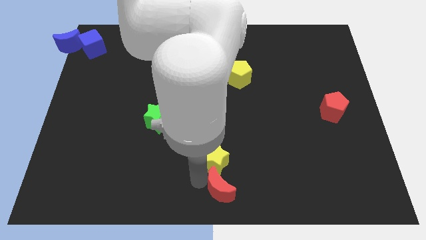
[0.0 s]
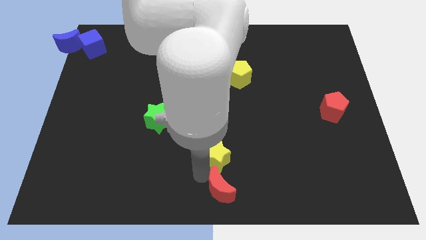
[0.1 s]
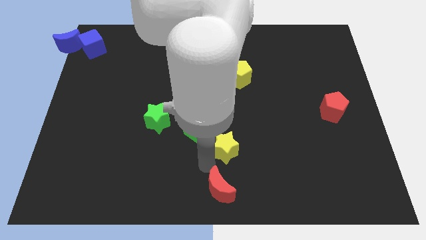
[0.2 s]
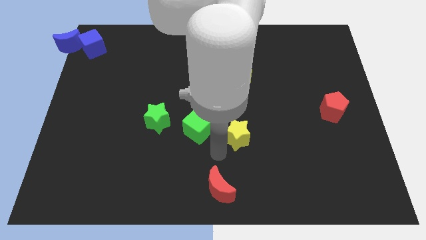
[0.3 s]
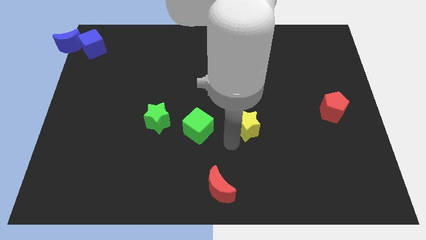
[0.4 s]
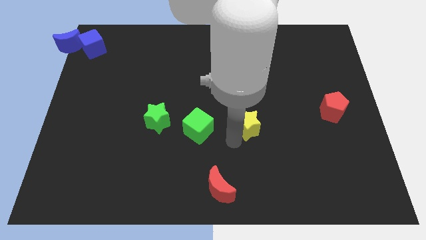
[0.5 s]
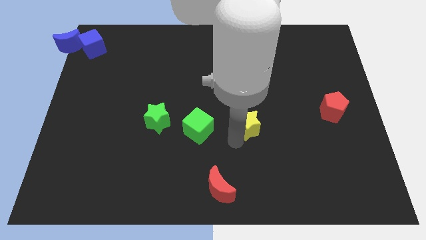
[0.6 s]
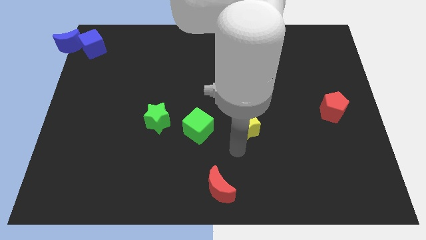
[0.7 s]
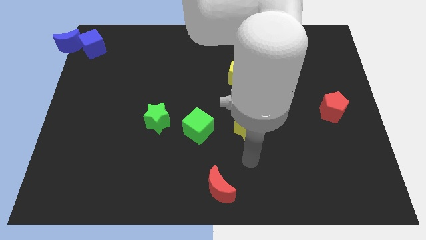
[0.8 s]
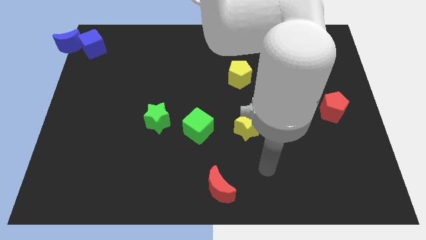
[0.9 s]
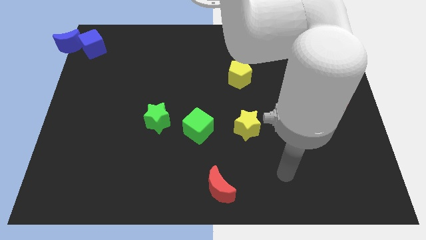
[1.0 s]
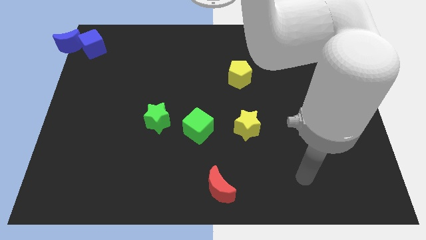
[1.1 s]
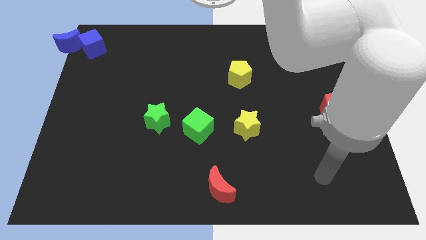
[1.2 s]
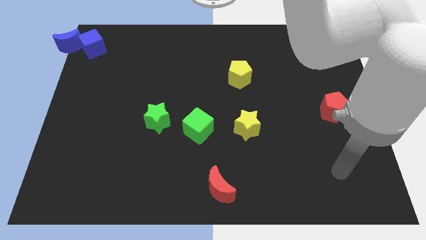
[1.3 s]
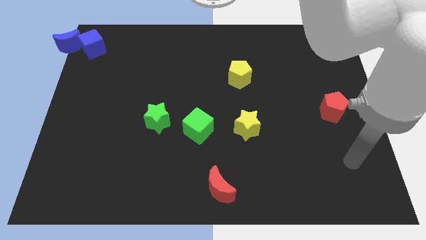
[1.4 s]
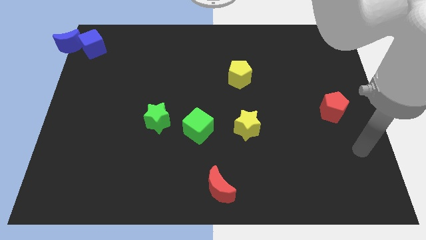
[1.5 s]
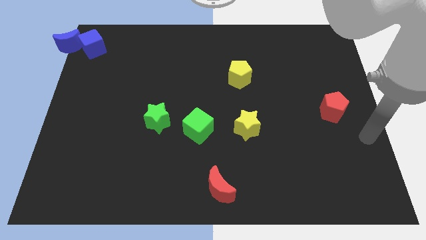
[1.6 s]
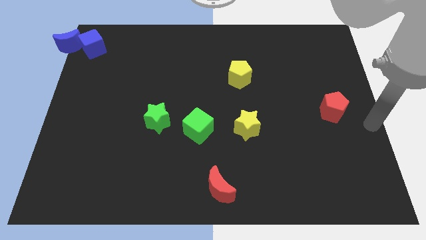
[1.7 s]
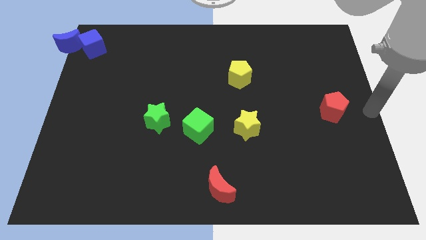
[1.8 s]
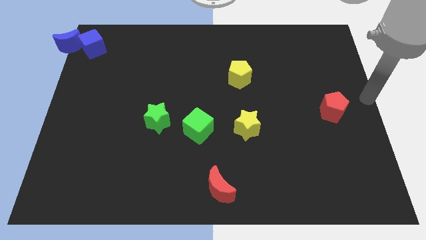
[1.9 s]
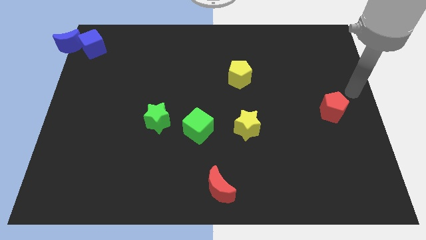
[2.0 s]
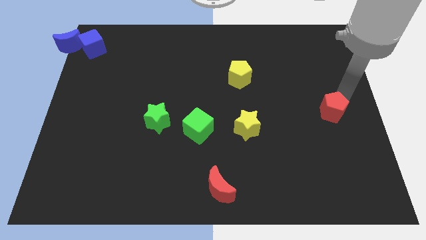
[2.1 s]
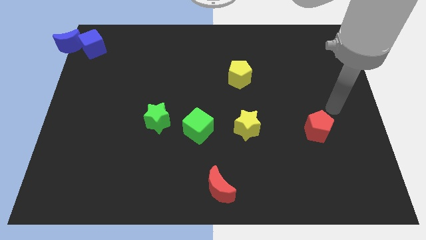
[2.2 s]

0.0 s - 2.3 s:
push the red pentagon to the right of the yellow star

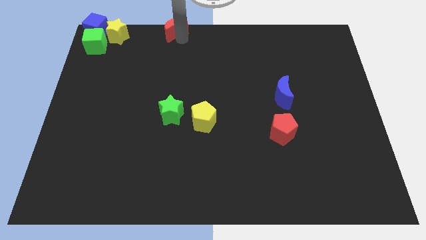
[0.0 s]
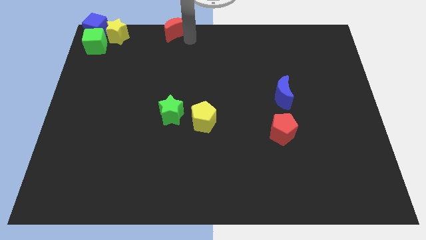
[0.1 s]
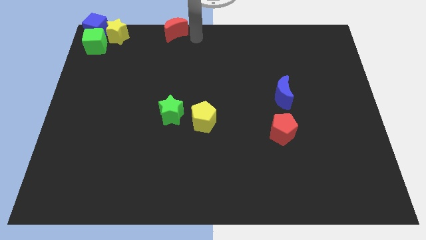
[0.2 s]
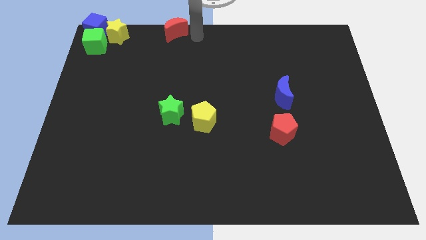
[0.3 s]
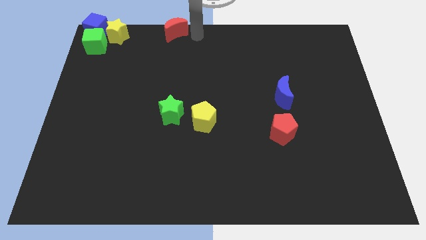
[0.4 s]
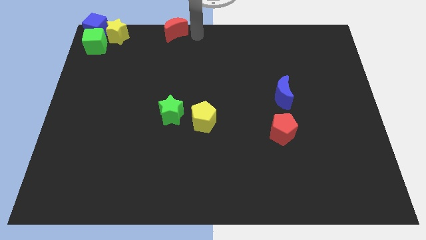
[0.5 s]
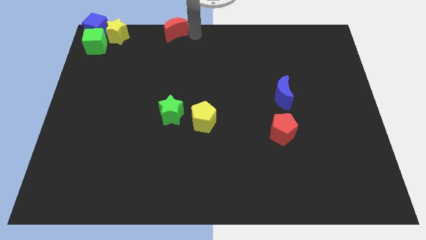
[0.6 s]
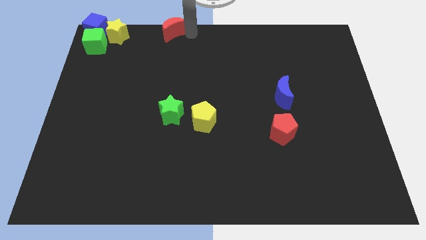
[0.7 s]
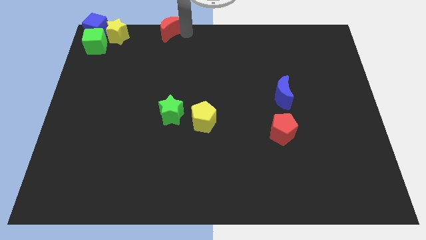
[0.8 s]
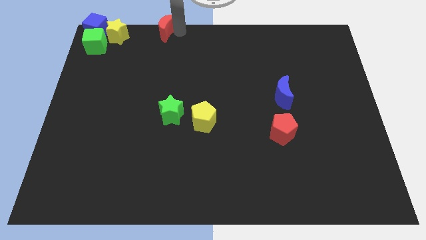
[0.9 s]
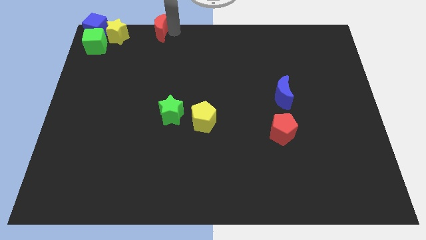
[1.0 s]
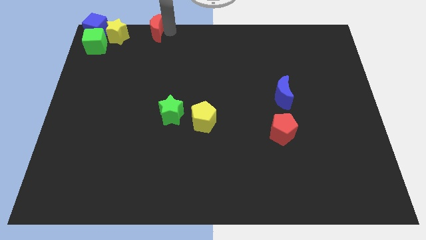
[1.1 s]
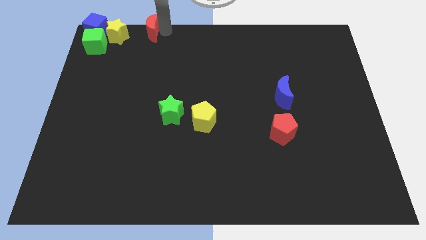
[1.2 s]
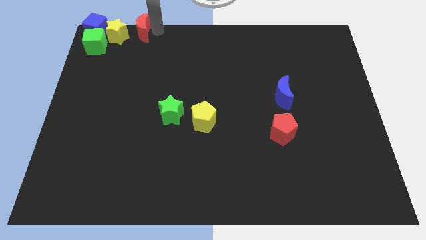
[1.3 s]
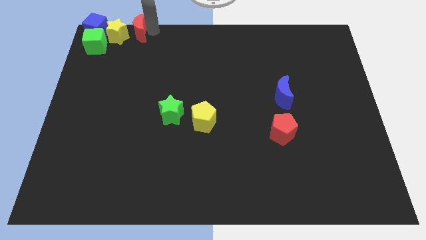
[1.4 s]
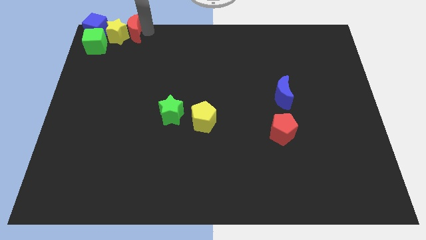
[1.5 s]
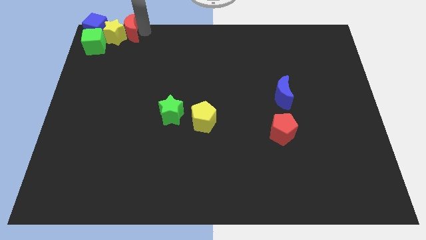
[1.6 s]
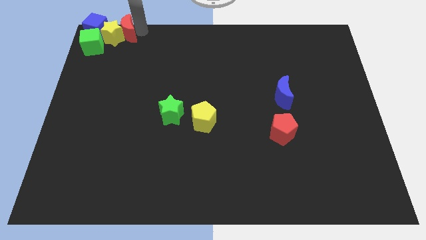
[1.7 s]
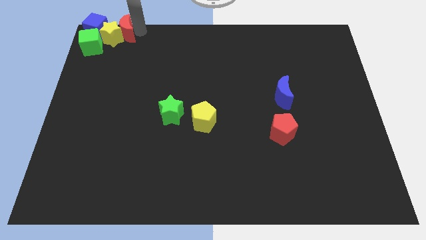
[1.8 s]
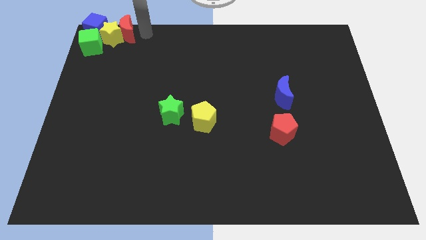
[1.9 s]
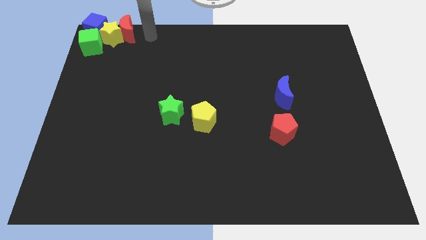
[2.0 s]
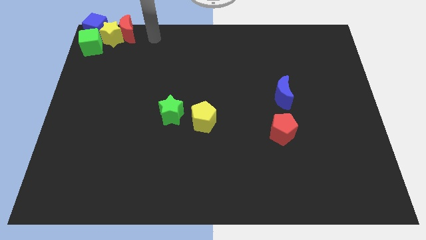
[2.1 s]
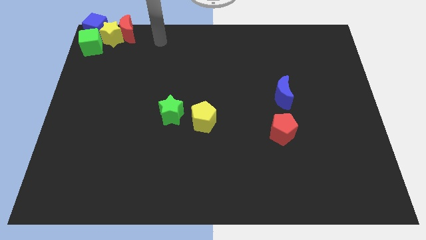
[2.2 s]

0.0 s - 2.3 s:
move the red crescent into the yellow star

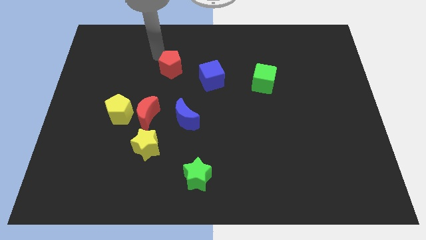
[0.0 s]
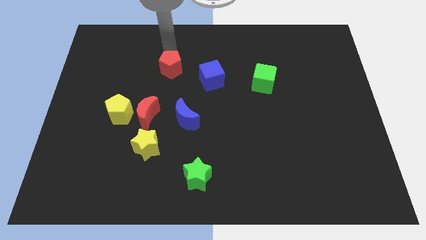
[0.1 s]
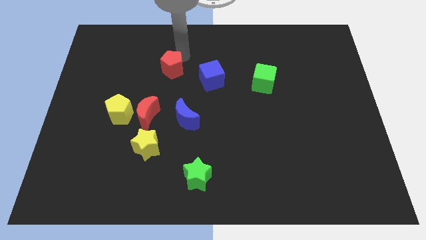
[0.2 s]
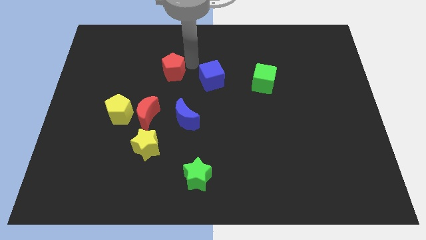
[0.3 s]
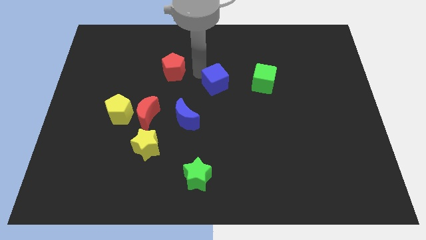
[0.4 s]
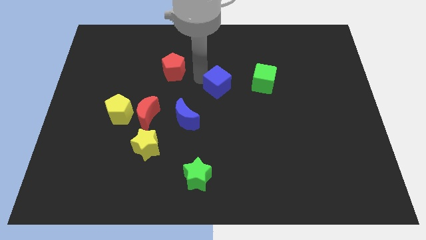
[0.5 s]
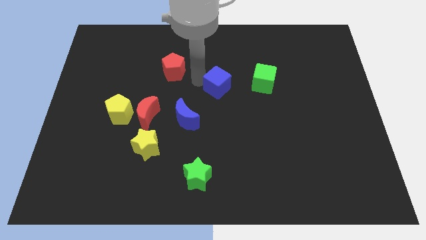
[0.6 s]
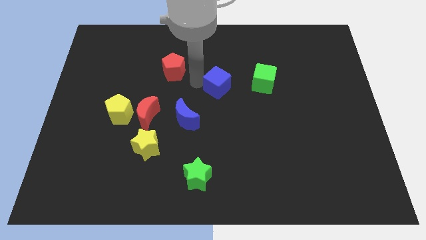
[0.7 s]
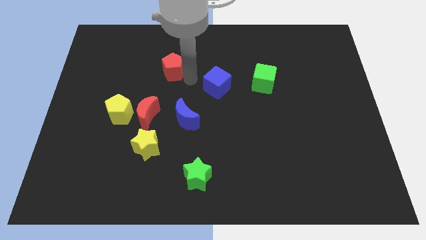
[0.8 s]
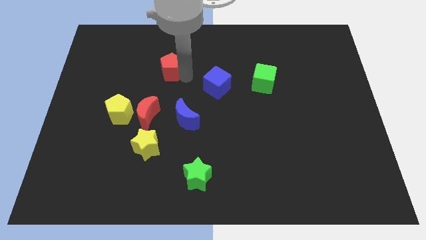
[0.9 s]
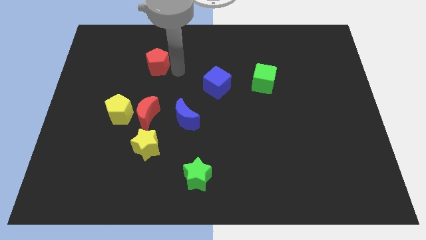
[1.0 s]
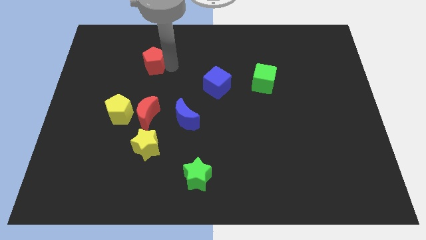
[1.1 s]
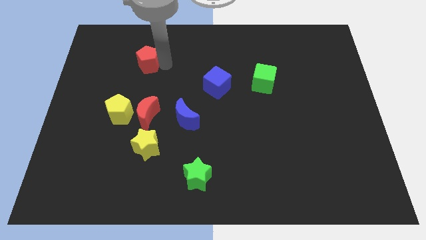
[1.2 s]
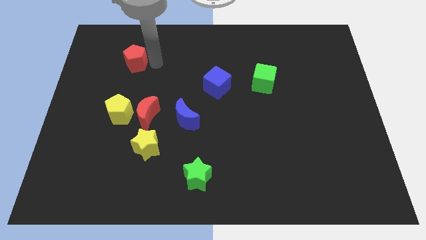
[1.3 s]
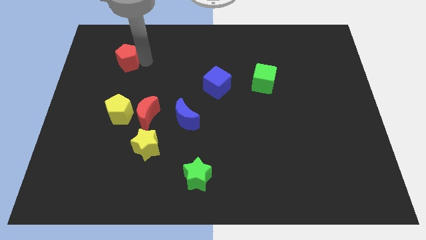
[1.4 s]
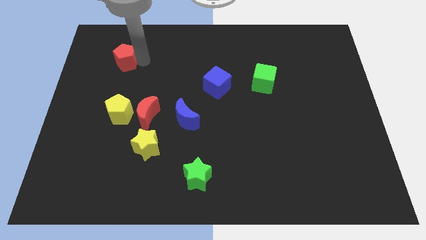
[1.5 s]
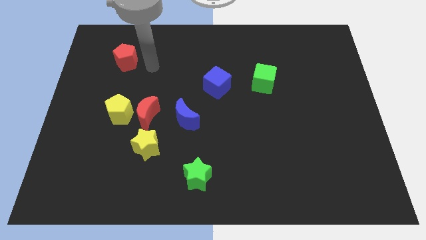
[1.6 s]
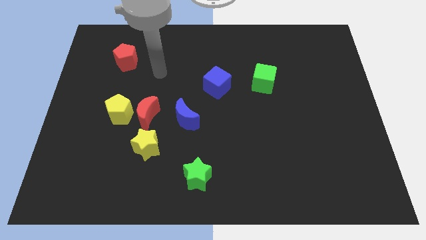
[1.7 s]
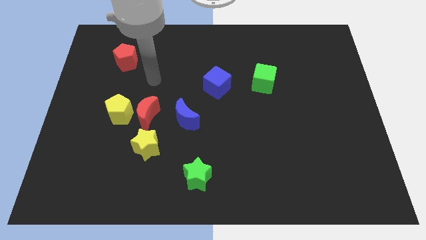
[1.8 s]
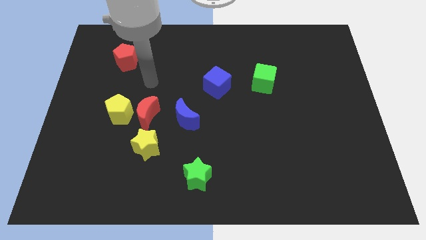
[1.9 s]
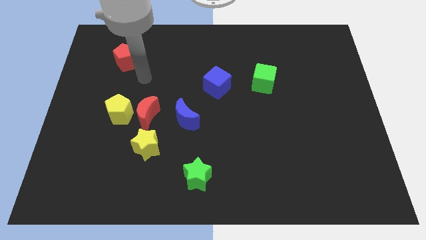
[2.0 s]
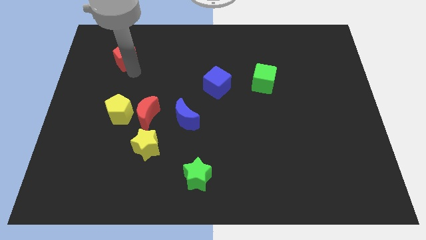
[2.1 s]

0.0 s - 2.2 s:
place the red pentagon vertically above the yellow pentagon

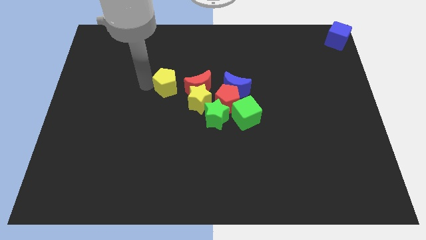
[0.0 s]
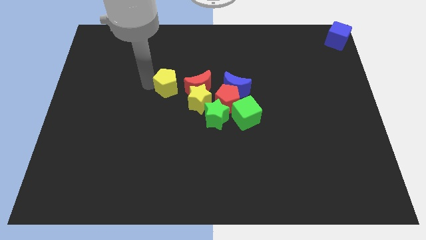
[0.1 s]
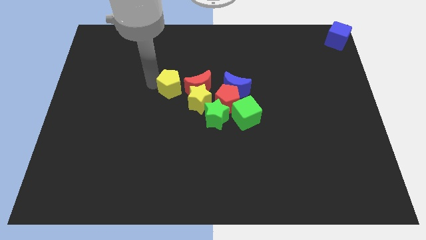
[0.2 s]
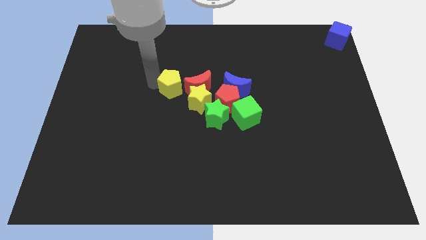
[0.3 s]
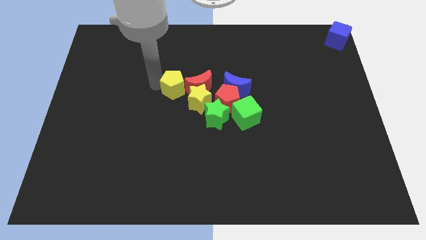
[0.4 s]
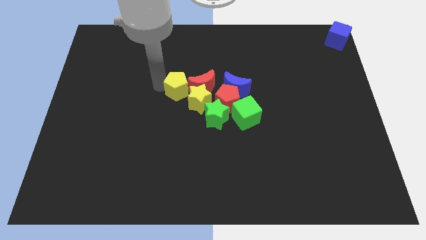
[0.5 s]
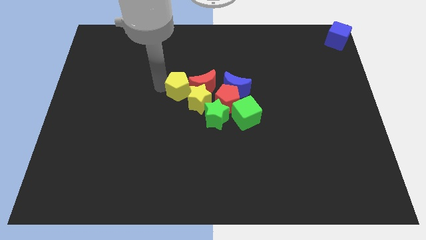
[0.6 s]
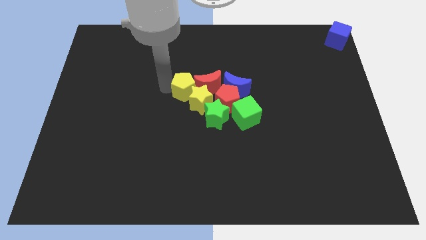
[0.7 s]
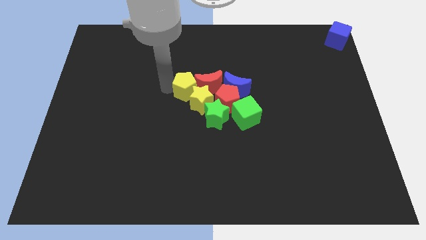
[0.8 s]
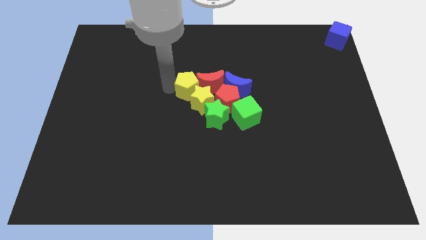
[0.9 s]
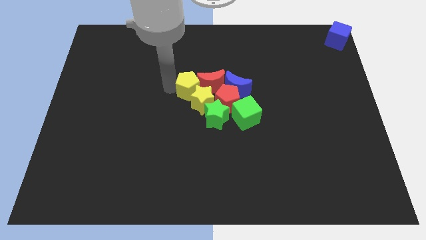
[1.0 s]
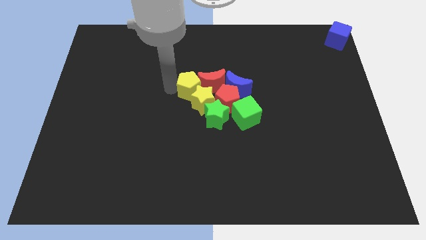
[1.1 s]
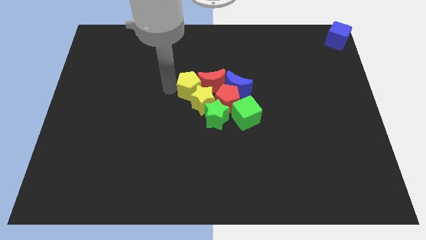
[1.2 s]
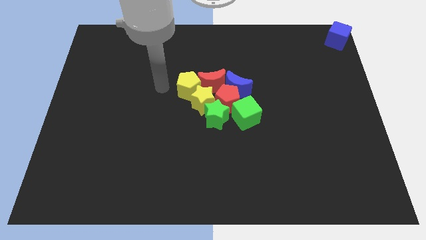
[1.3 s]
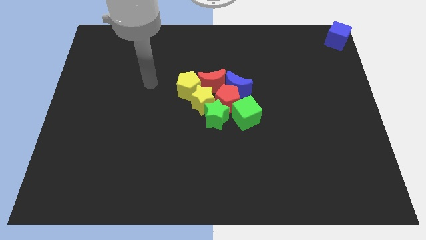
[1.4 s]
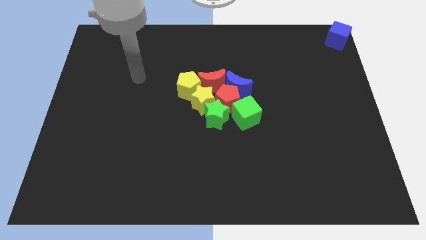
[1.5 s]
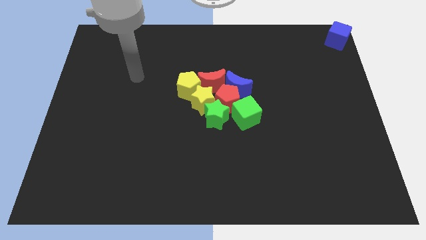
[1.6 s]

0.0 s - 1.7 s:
push the yellow pentagon to the top left side of the yellow star

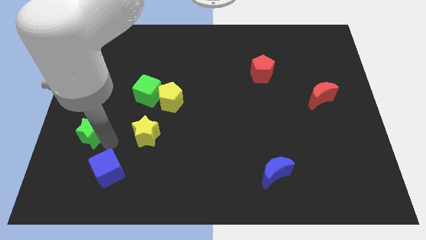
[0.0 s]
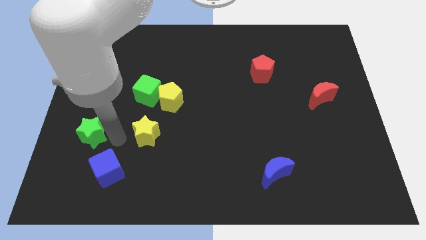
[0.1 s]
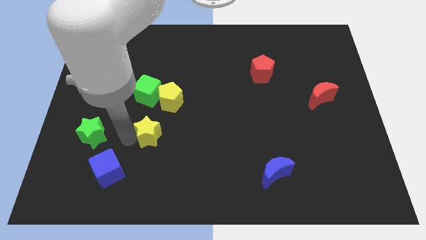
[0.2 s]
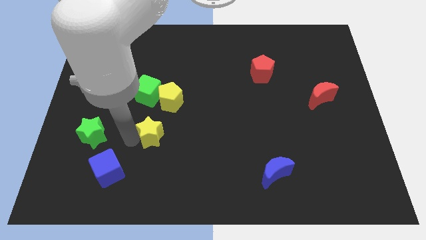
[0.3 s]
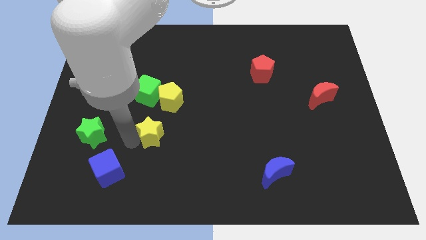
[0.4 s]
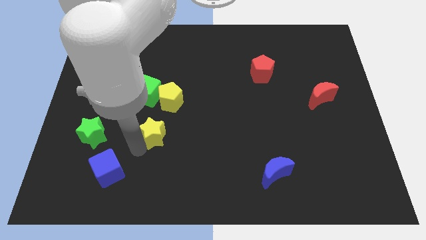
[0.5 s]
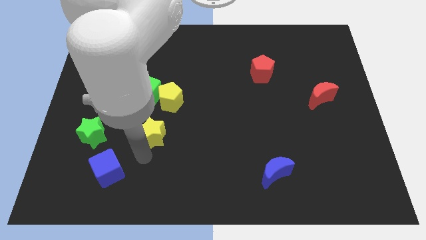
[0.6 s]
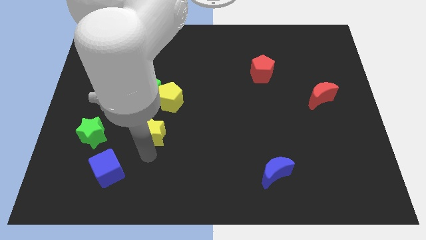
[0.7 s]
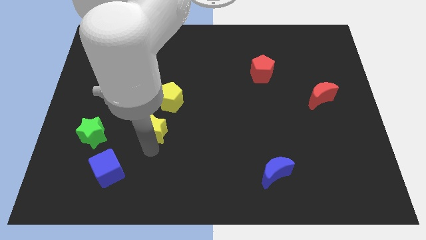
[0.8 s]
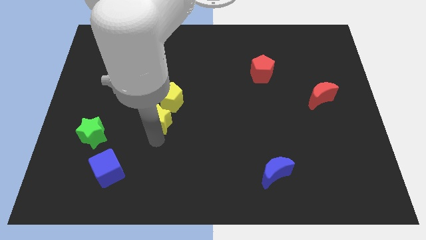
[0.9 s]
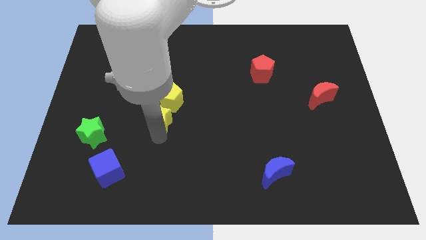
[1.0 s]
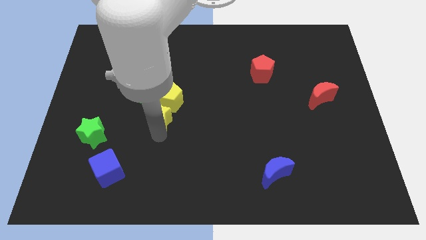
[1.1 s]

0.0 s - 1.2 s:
place yellow star to the bottom of yellow pentagon
